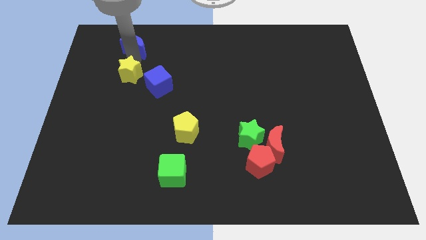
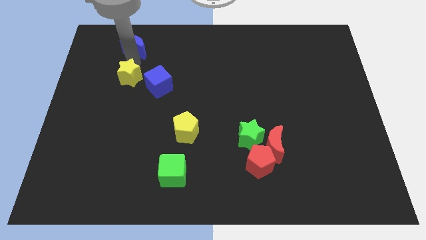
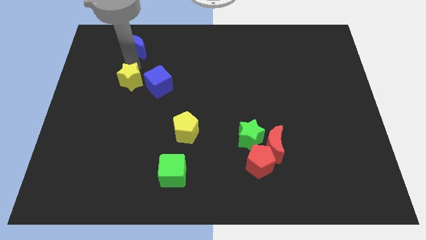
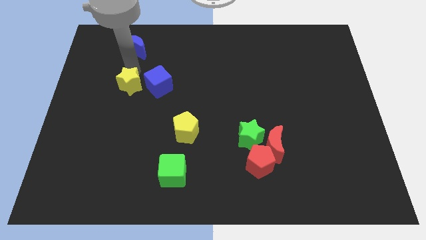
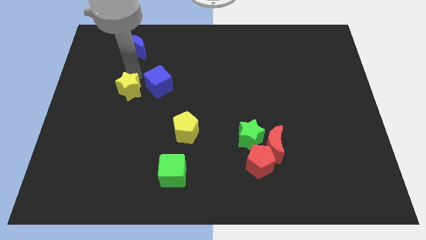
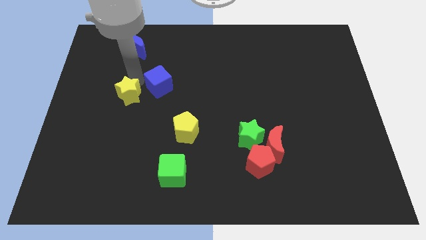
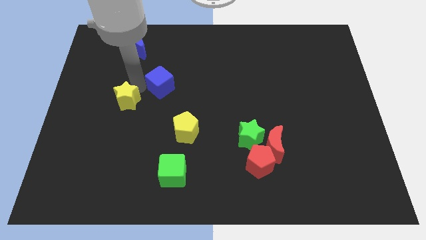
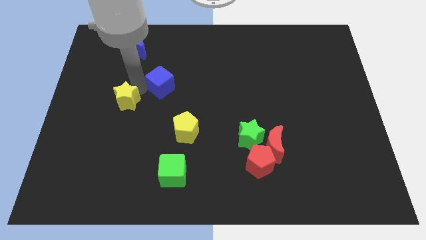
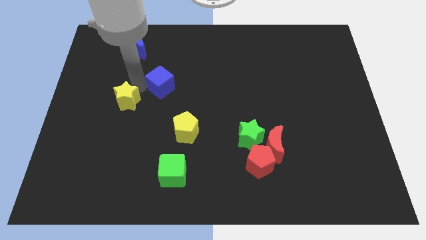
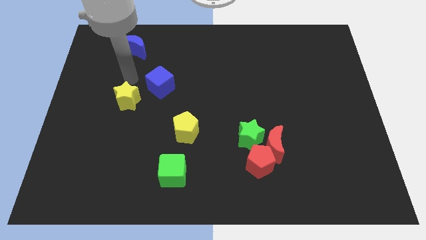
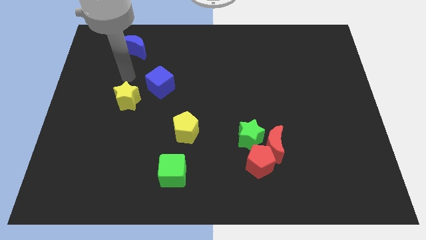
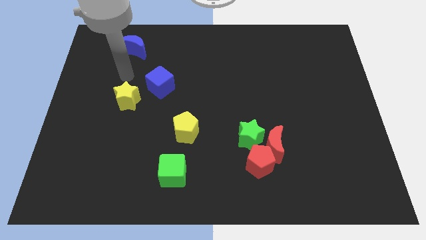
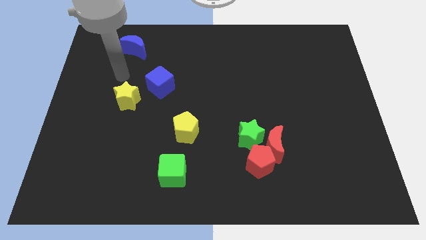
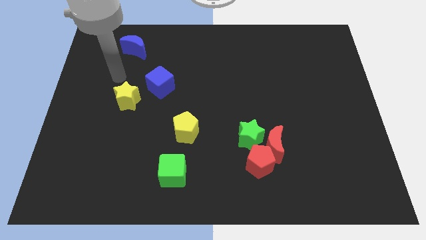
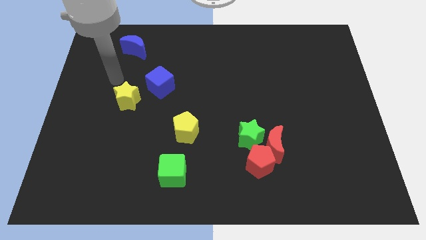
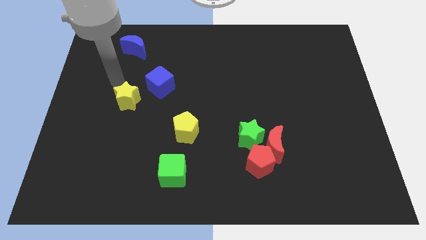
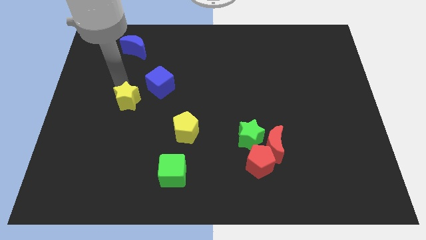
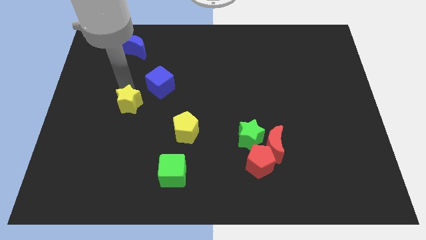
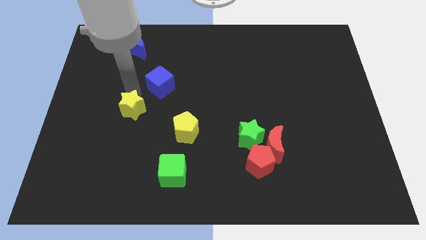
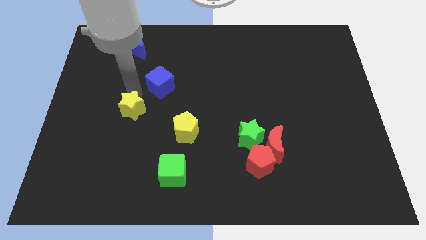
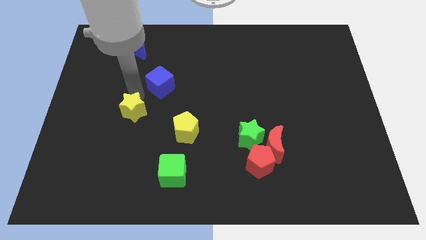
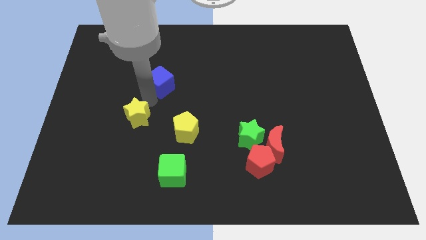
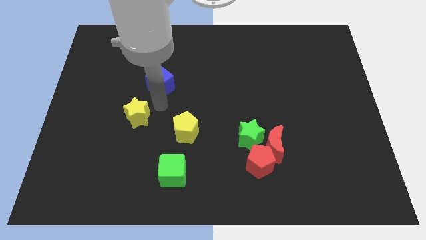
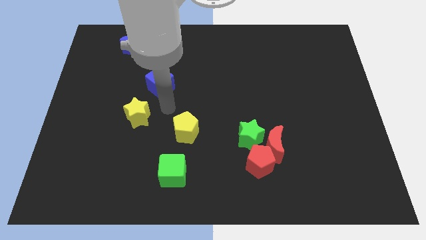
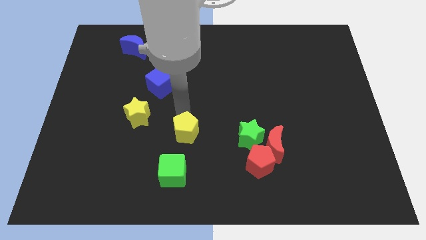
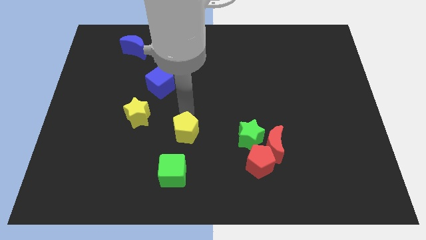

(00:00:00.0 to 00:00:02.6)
push the yellow star towards the yellow pentagon

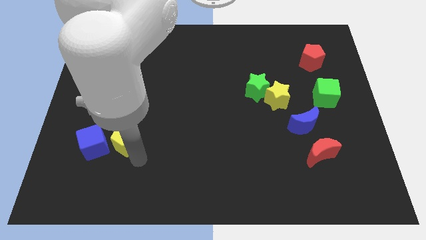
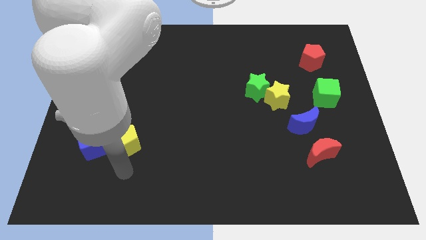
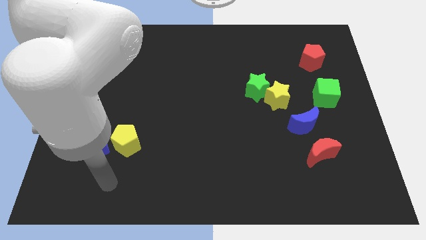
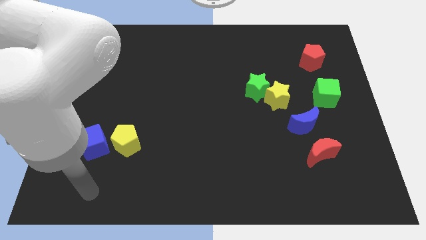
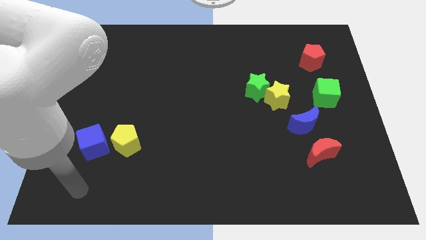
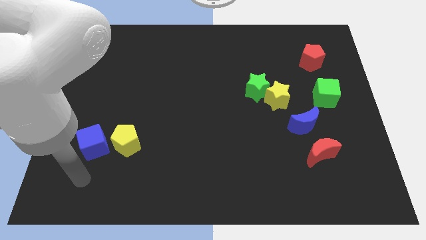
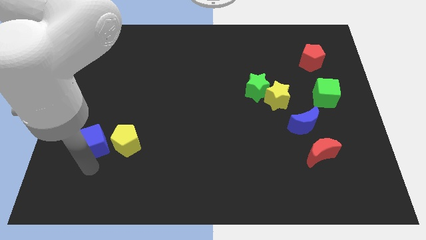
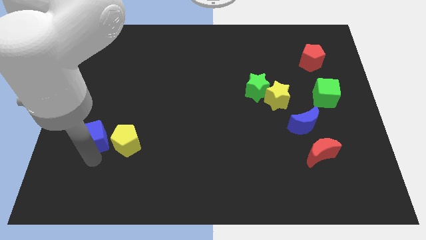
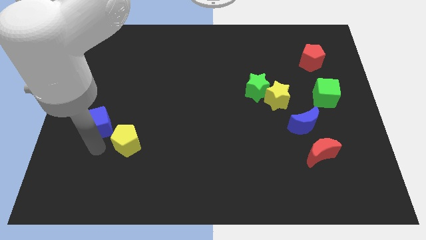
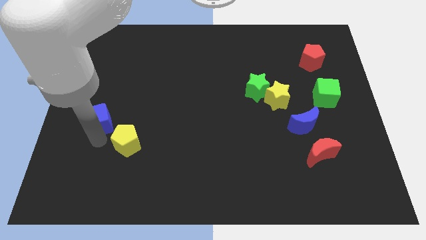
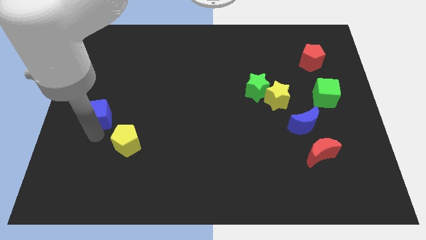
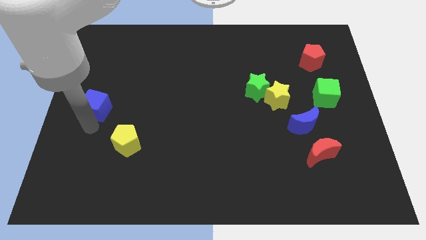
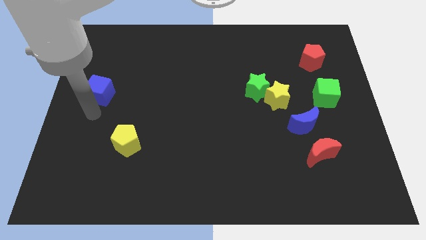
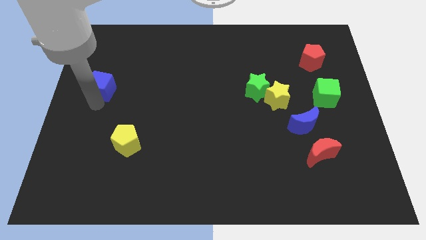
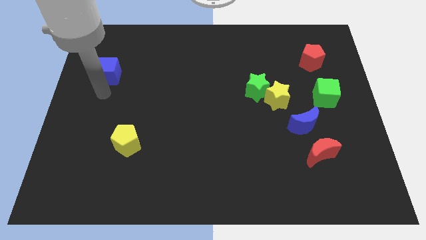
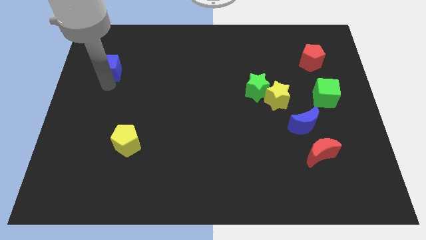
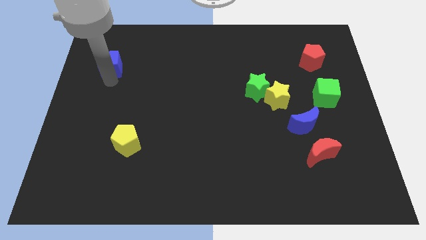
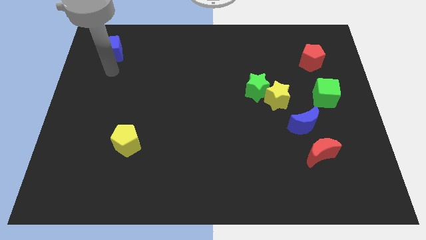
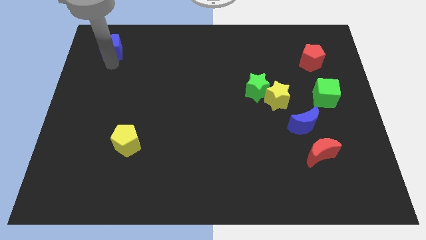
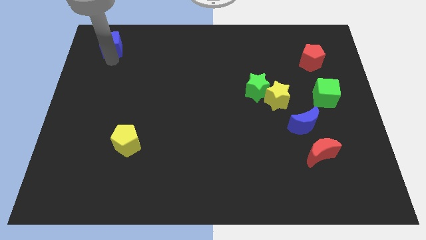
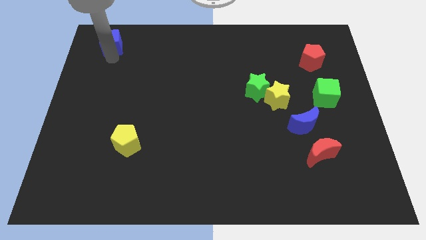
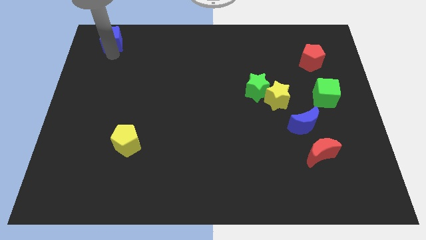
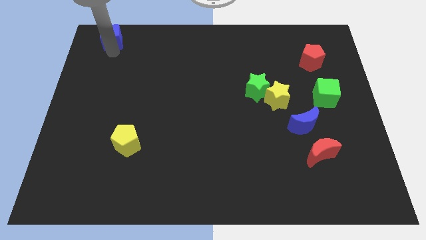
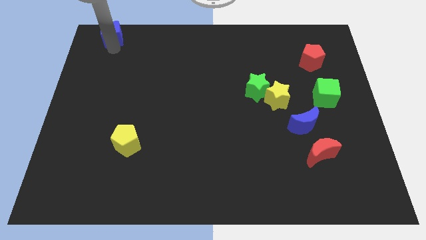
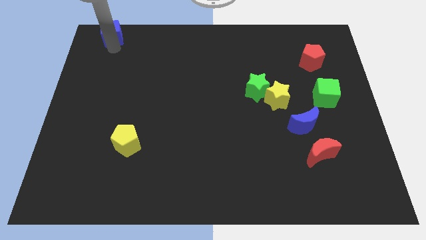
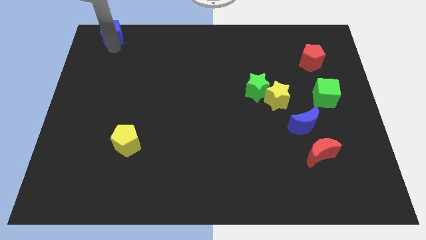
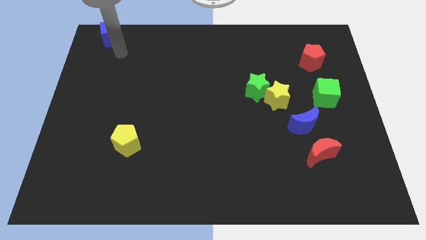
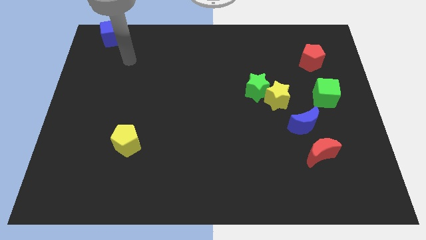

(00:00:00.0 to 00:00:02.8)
place blue cube at top left corner

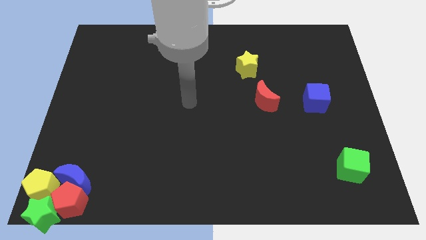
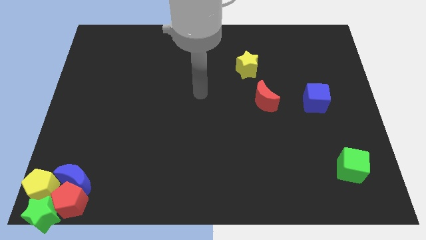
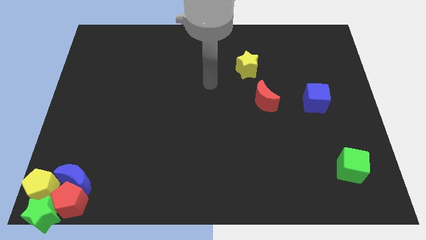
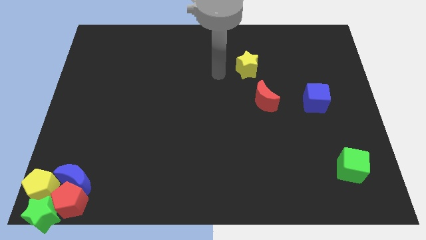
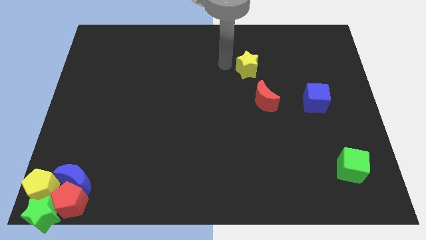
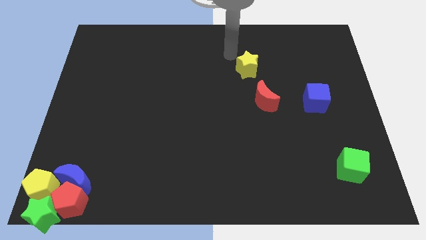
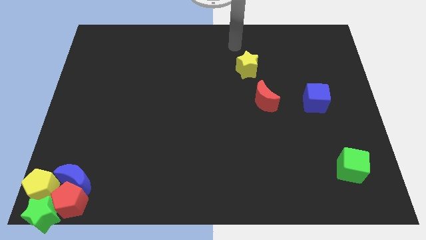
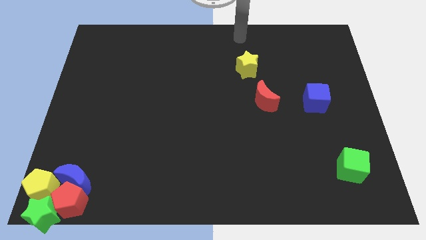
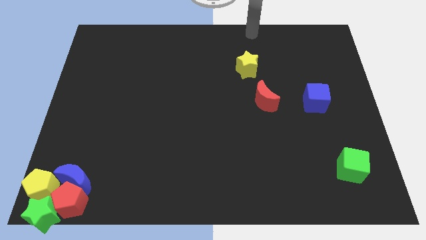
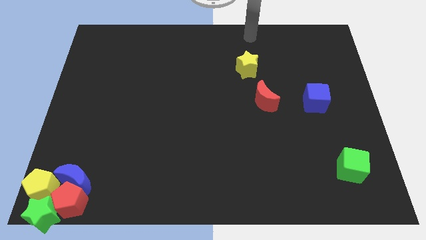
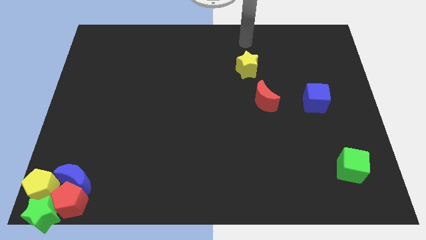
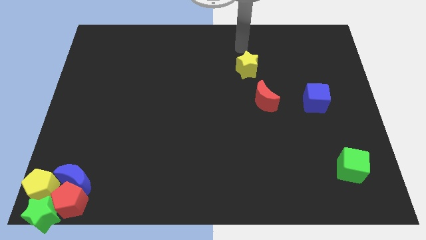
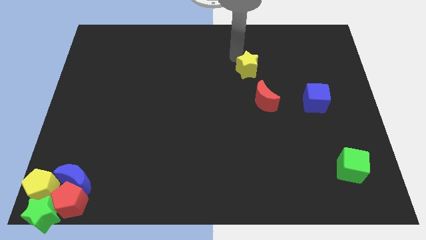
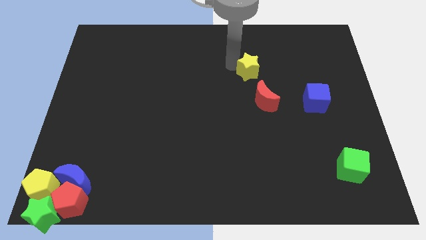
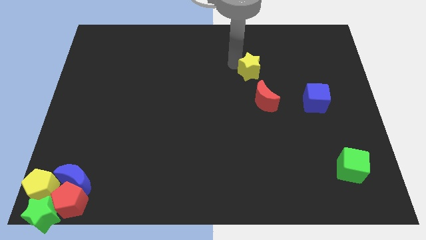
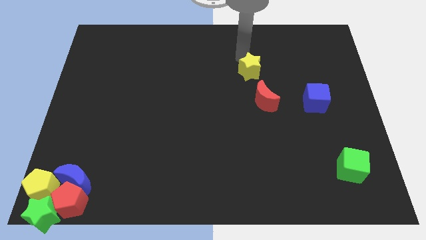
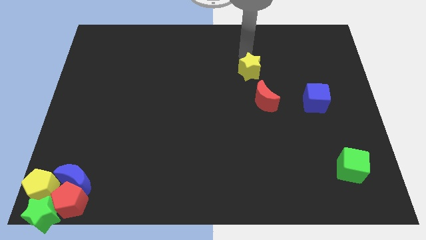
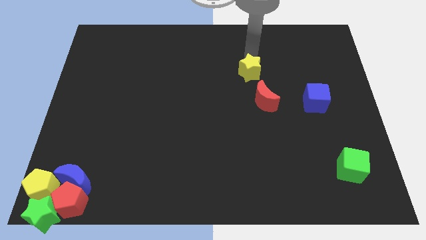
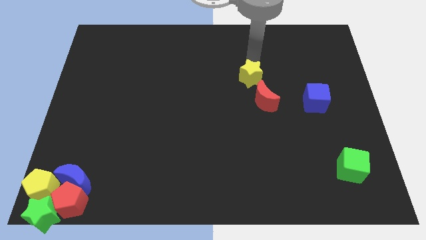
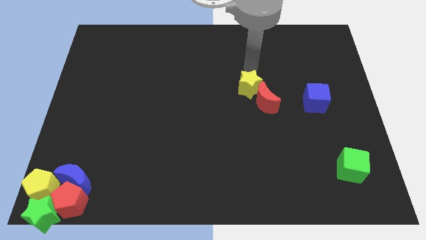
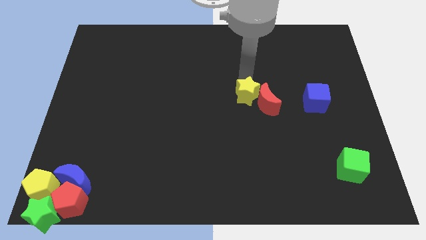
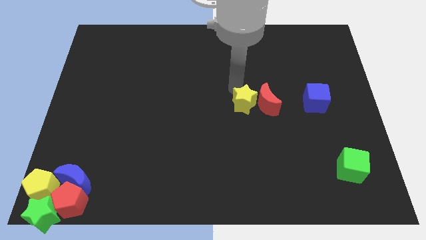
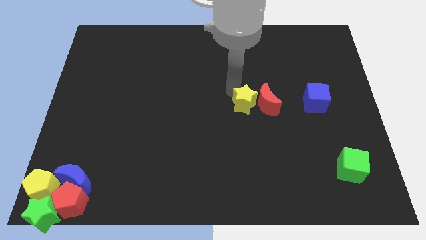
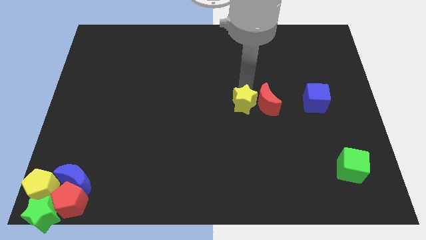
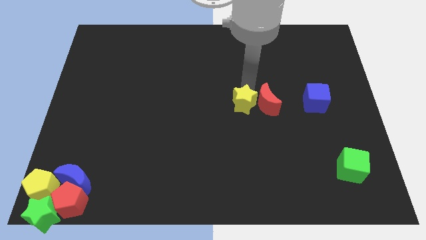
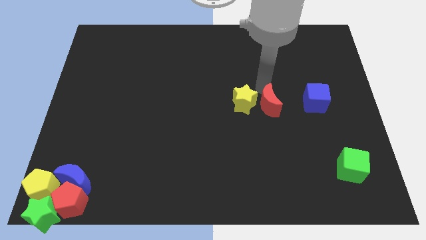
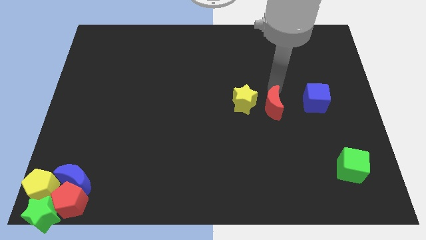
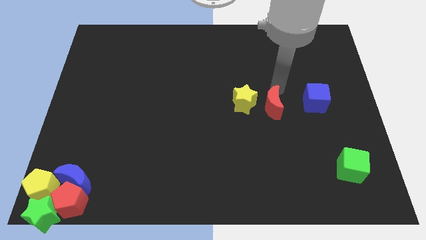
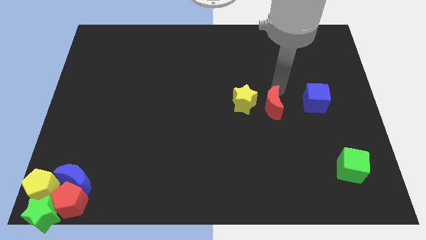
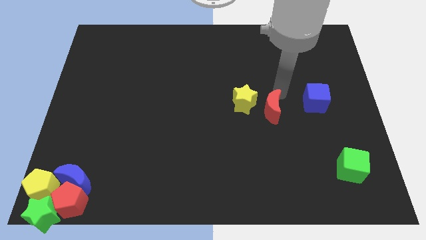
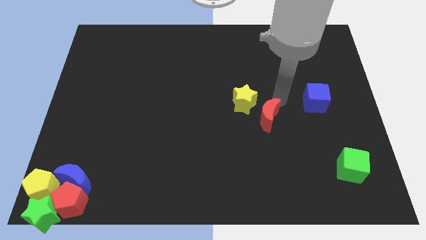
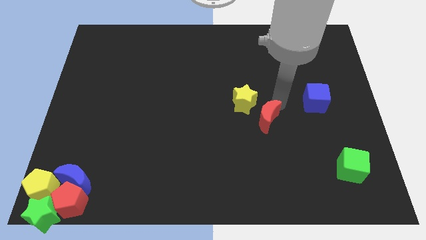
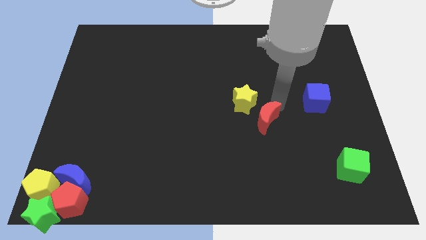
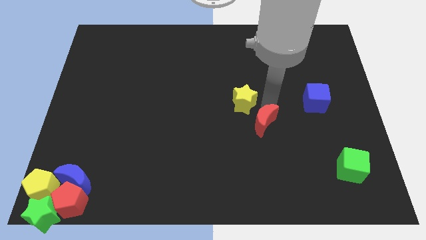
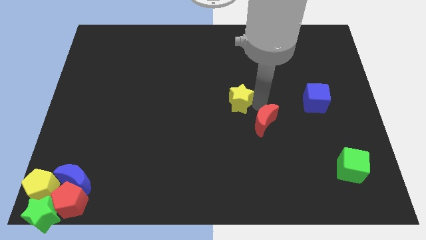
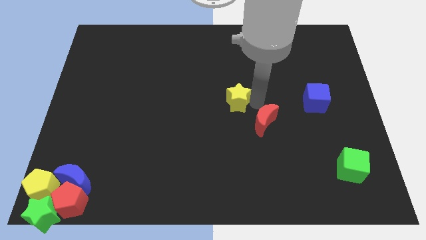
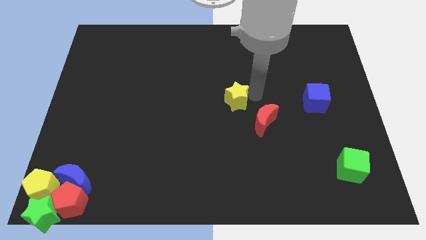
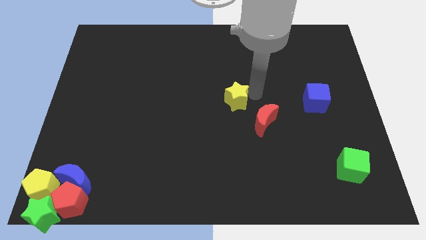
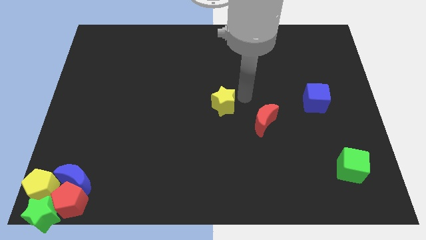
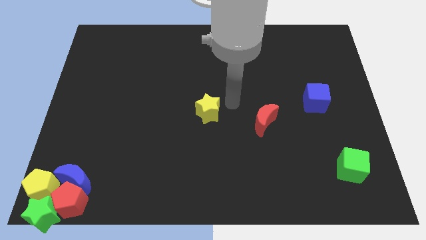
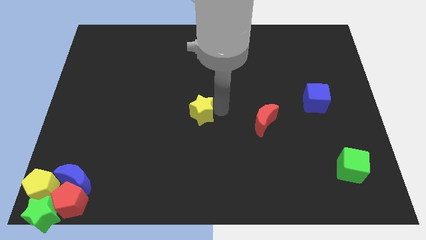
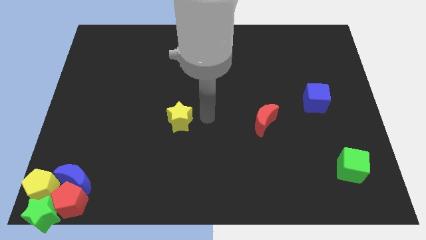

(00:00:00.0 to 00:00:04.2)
separate the yellow star from red moon
